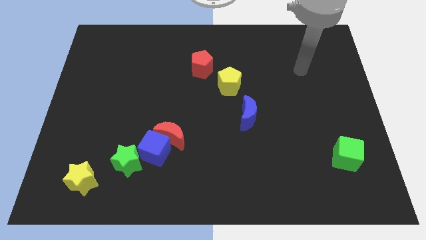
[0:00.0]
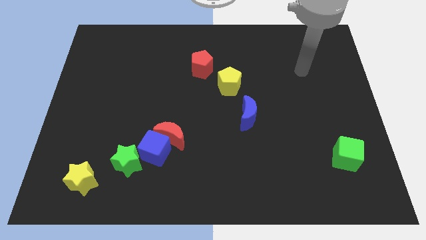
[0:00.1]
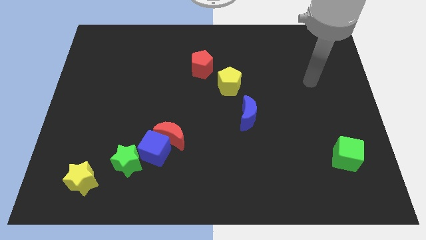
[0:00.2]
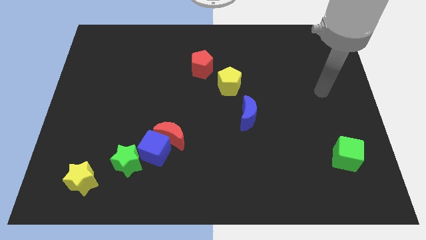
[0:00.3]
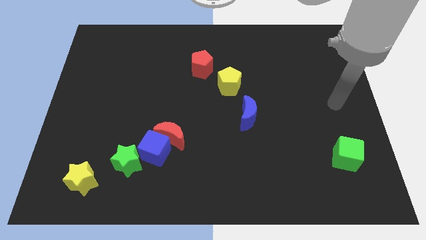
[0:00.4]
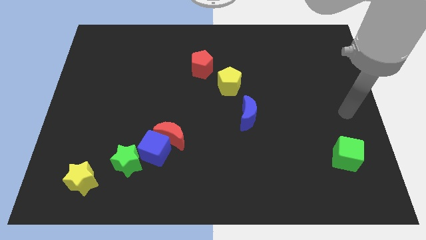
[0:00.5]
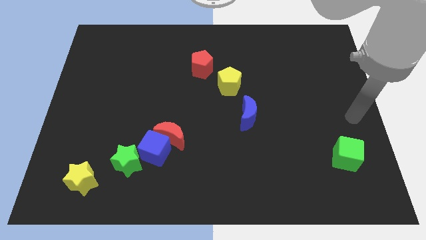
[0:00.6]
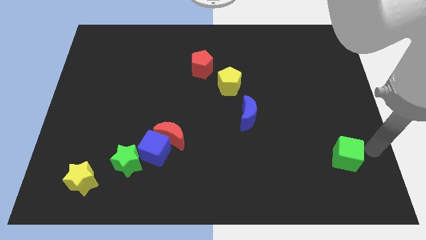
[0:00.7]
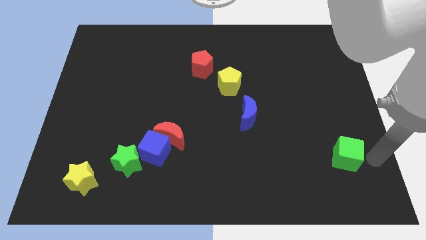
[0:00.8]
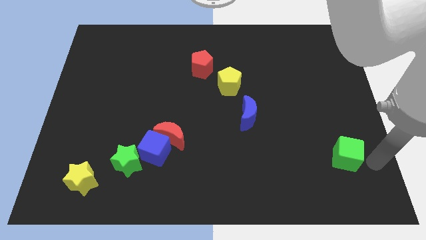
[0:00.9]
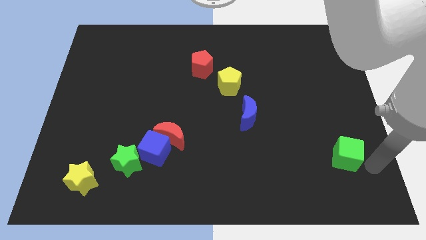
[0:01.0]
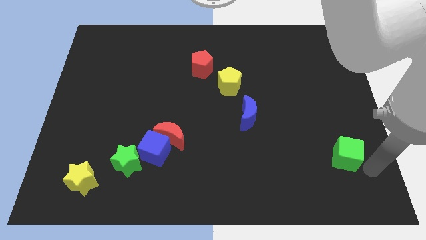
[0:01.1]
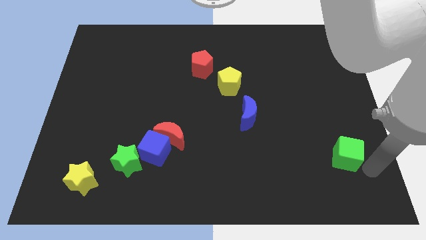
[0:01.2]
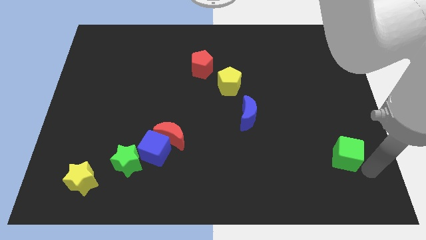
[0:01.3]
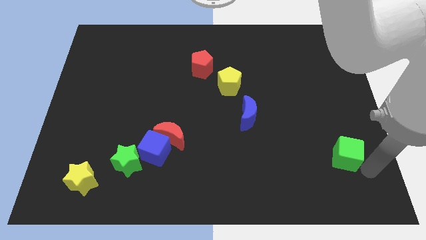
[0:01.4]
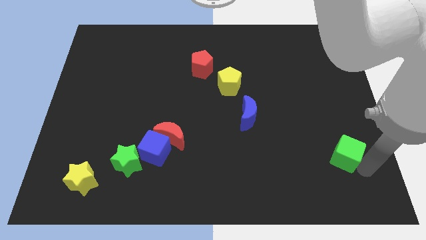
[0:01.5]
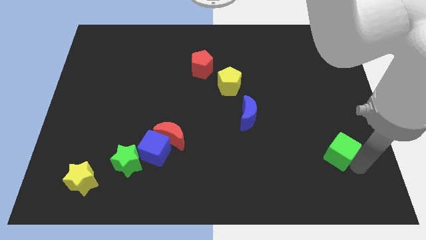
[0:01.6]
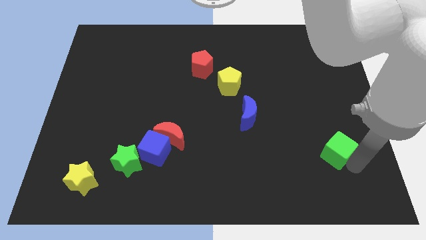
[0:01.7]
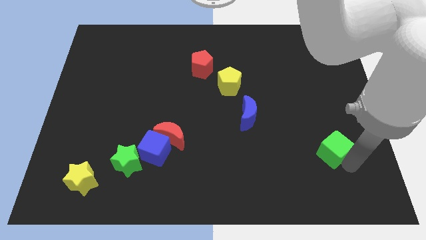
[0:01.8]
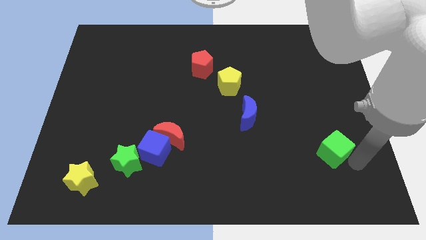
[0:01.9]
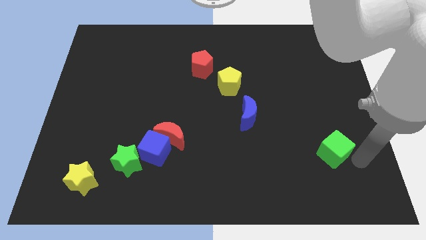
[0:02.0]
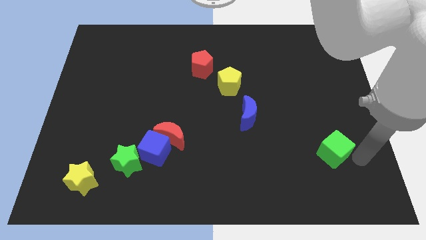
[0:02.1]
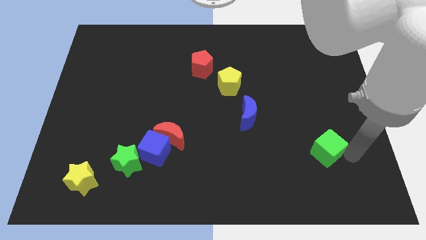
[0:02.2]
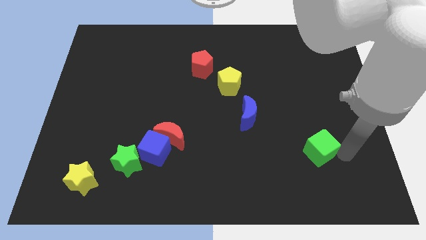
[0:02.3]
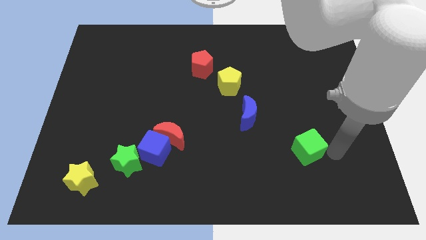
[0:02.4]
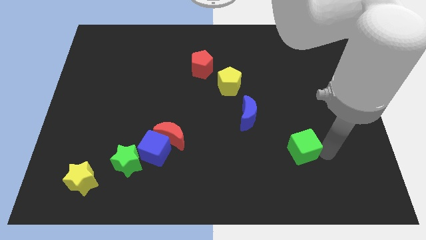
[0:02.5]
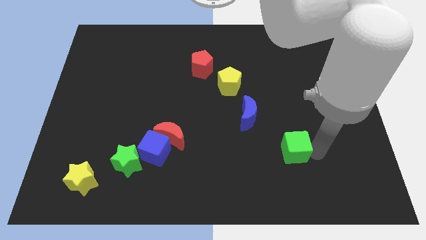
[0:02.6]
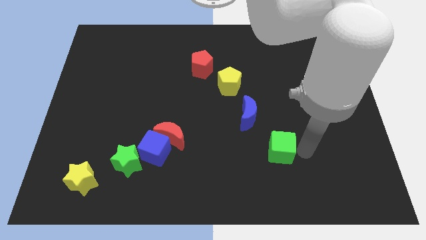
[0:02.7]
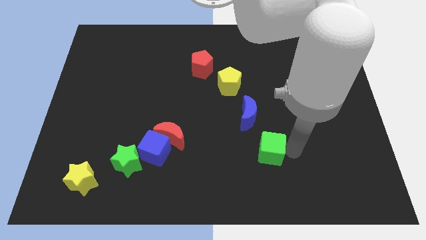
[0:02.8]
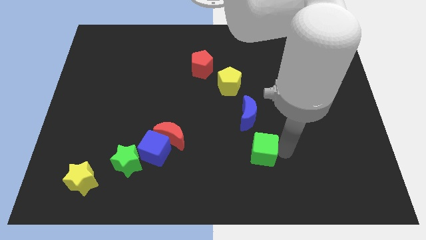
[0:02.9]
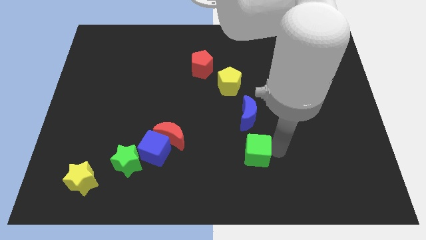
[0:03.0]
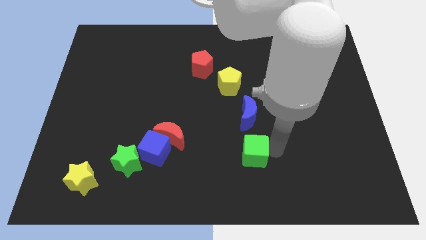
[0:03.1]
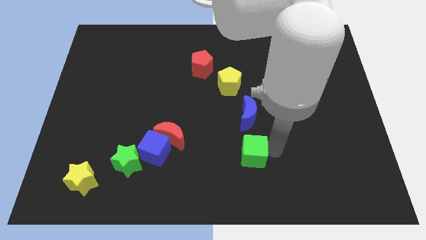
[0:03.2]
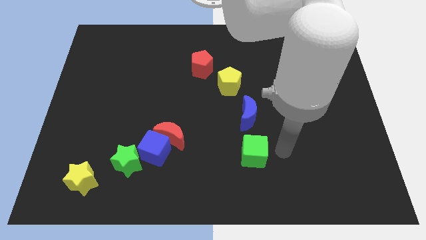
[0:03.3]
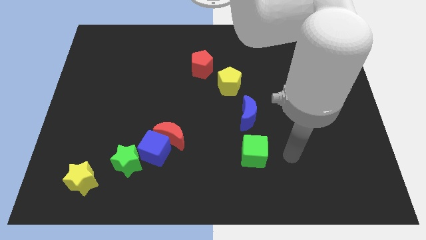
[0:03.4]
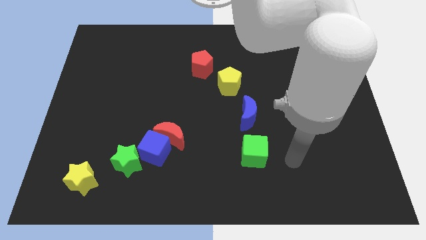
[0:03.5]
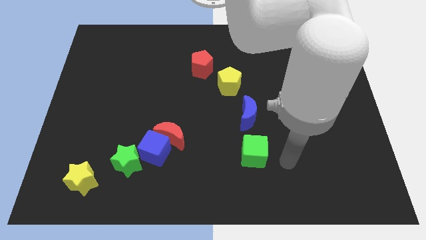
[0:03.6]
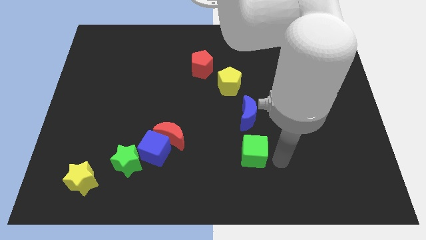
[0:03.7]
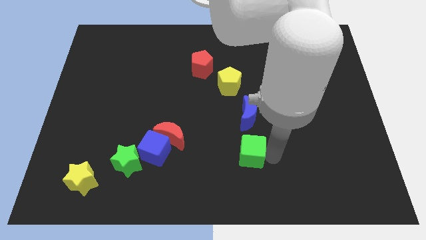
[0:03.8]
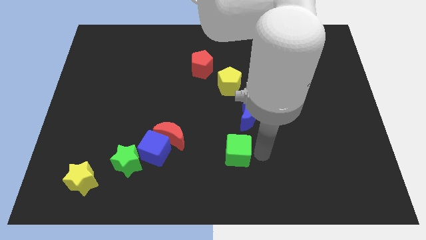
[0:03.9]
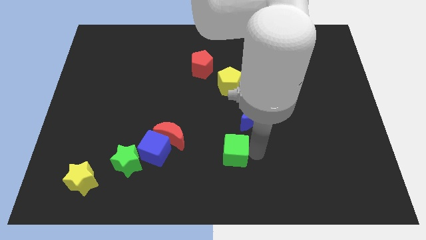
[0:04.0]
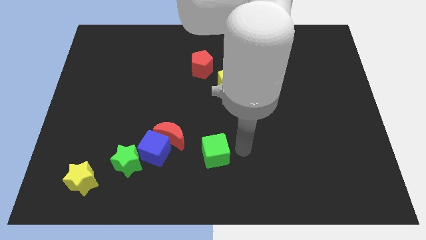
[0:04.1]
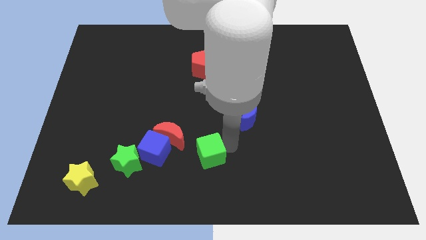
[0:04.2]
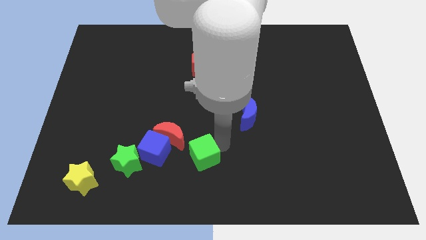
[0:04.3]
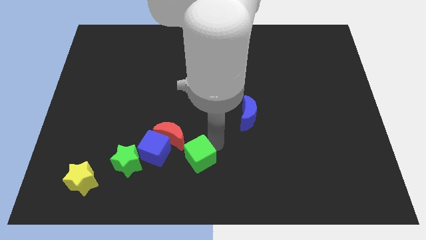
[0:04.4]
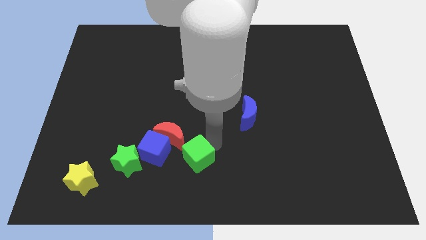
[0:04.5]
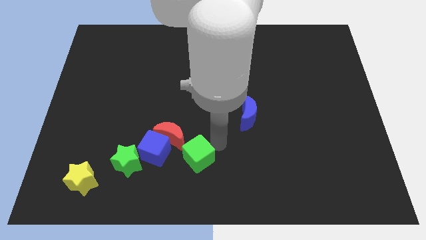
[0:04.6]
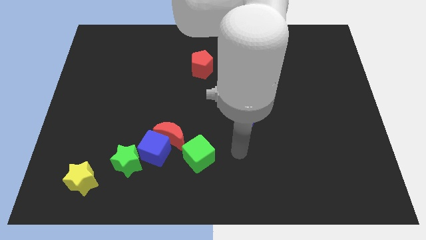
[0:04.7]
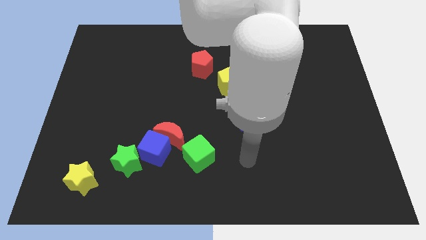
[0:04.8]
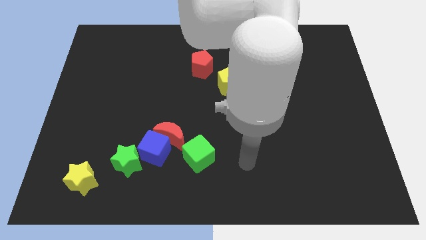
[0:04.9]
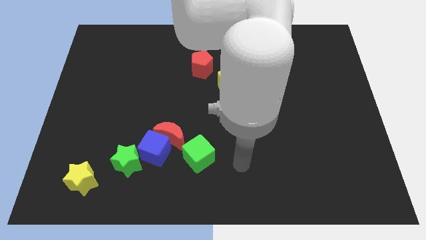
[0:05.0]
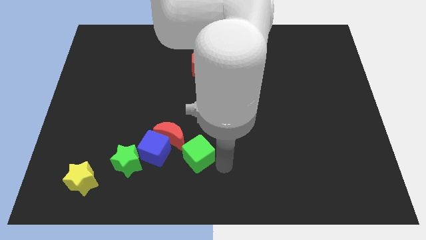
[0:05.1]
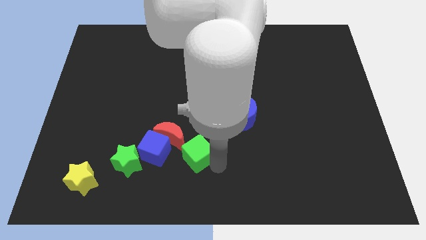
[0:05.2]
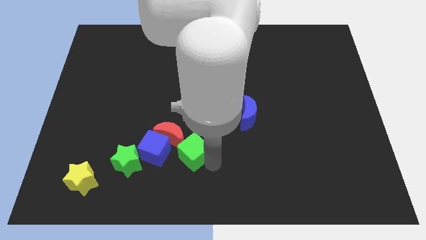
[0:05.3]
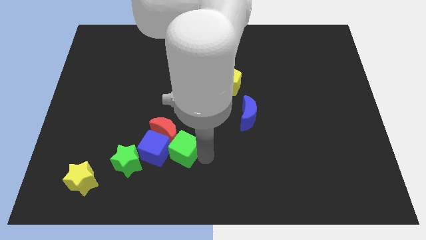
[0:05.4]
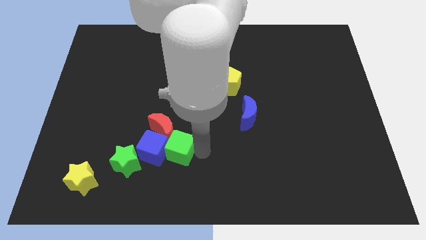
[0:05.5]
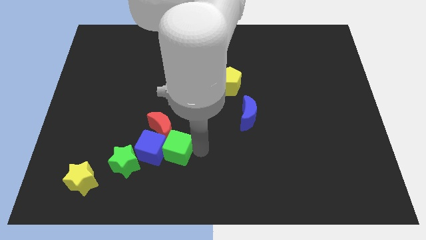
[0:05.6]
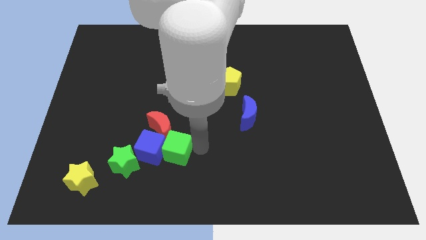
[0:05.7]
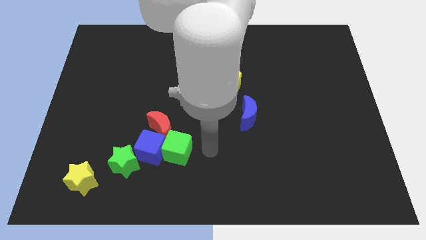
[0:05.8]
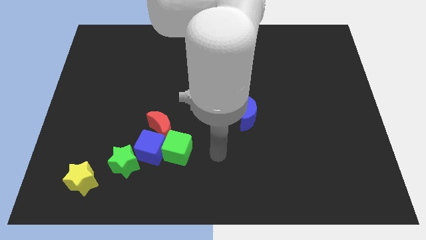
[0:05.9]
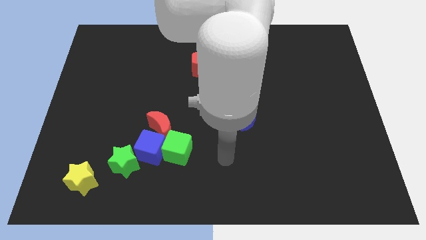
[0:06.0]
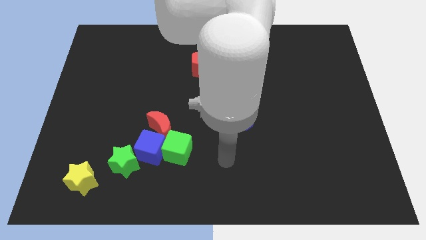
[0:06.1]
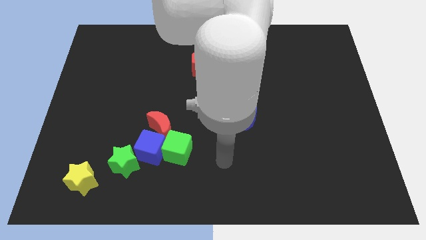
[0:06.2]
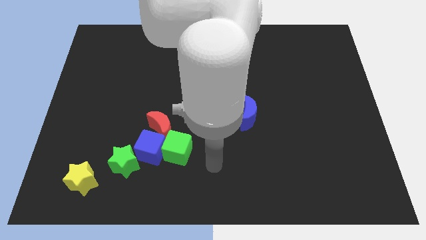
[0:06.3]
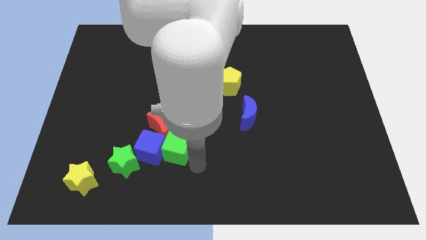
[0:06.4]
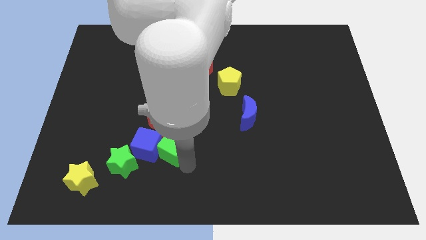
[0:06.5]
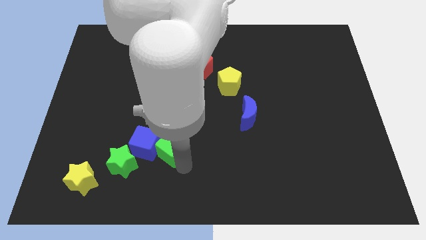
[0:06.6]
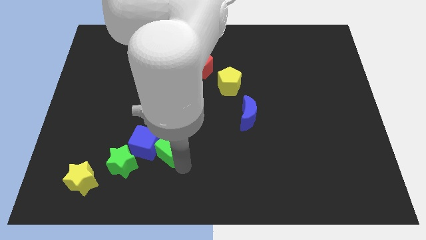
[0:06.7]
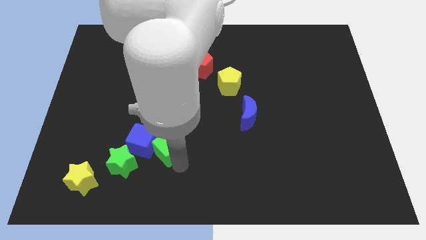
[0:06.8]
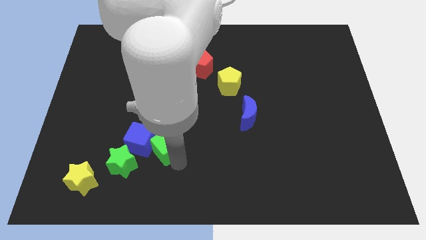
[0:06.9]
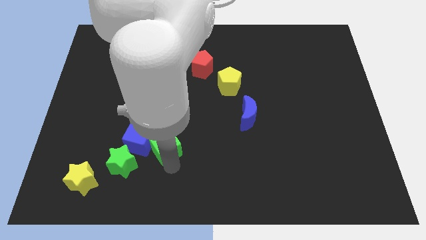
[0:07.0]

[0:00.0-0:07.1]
put the green cube towards the red moon

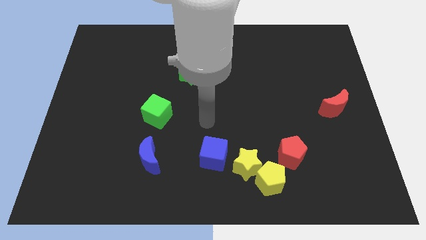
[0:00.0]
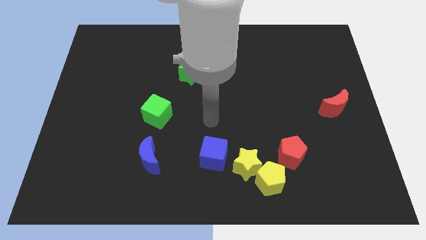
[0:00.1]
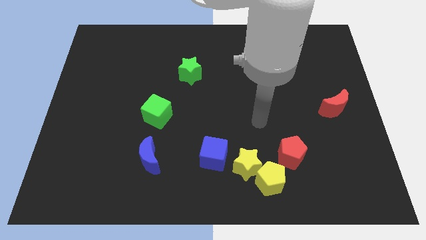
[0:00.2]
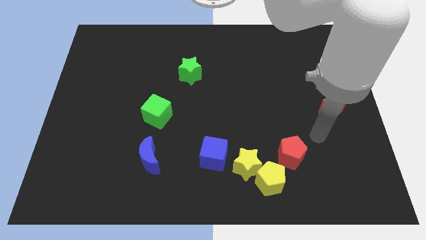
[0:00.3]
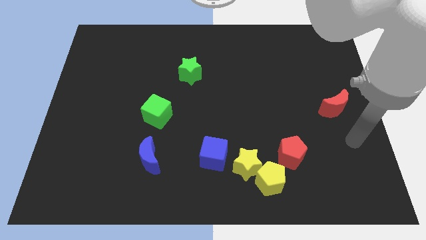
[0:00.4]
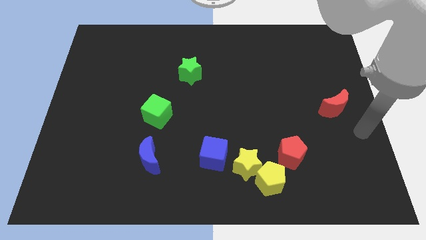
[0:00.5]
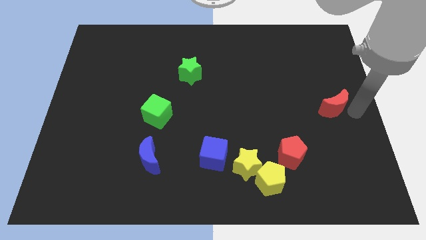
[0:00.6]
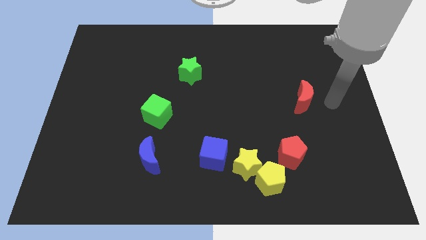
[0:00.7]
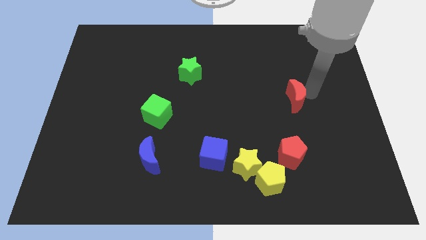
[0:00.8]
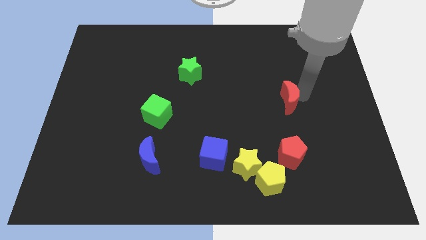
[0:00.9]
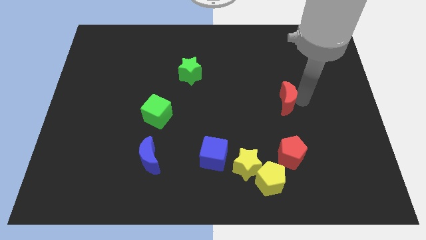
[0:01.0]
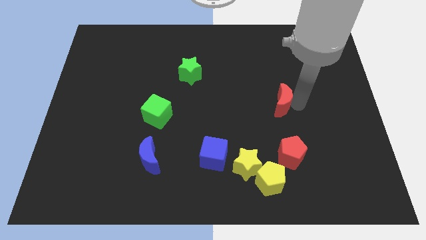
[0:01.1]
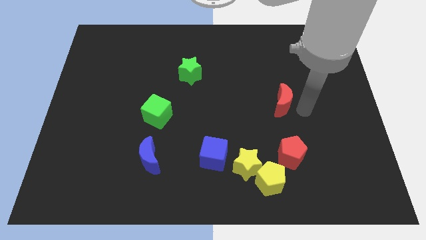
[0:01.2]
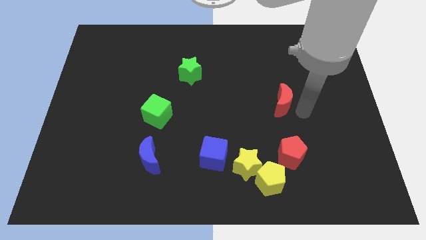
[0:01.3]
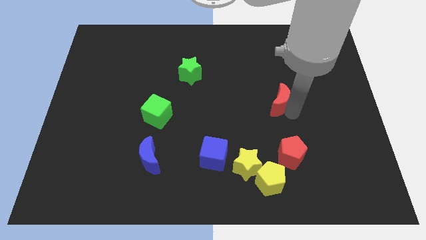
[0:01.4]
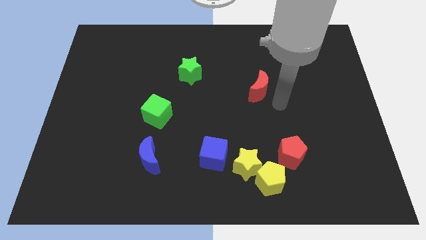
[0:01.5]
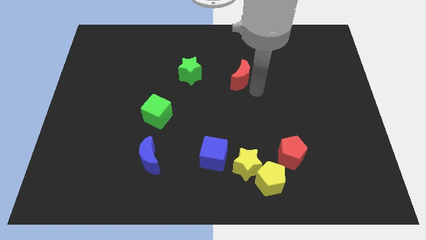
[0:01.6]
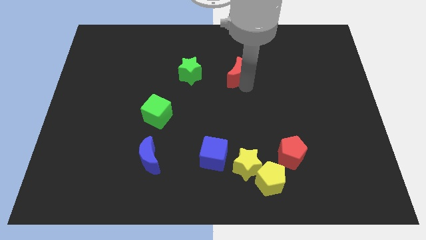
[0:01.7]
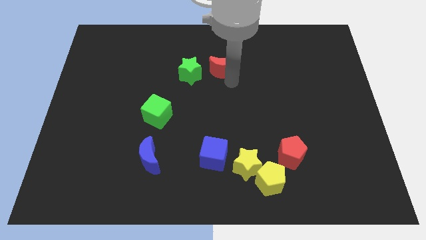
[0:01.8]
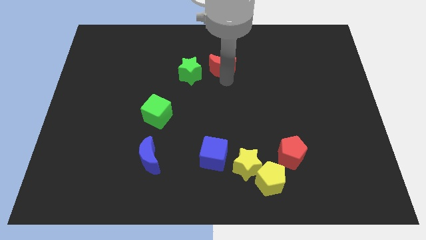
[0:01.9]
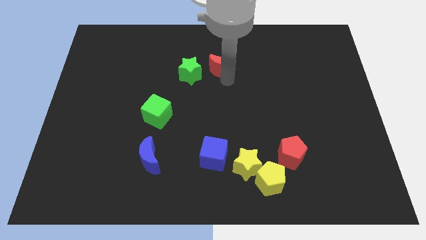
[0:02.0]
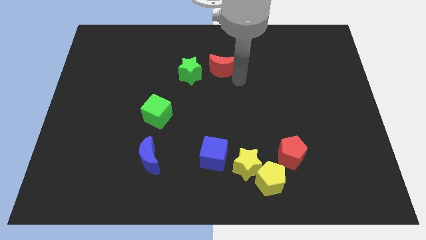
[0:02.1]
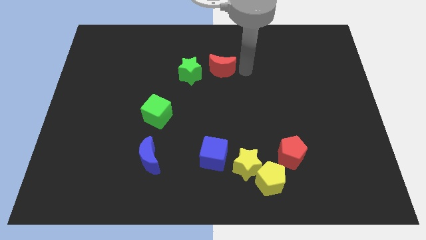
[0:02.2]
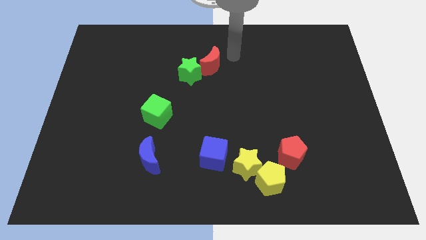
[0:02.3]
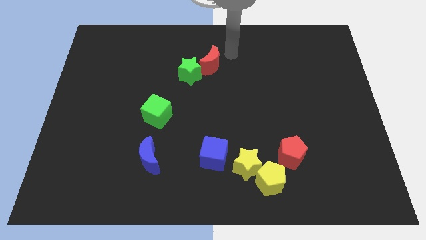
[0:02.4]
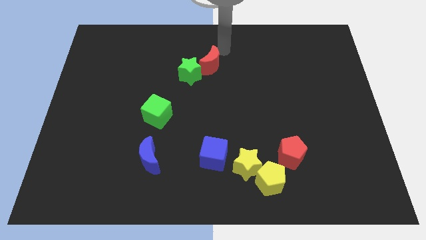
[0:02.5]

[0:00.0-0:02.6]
slide the red moon close to the green star
